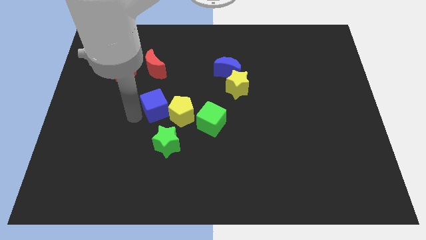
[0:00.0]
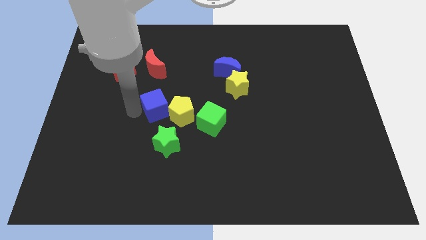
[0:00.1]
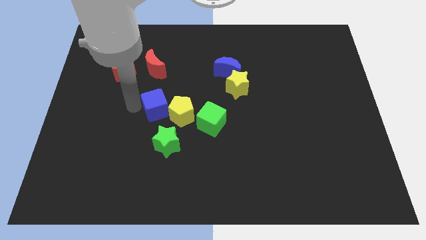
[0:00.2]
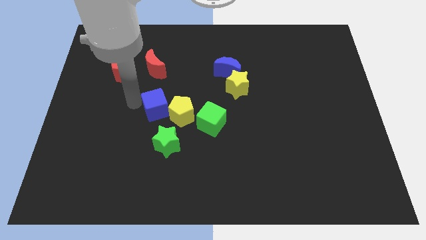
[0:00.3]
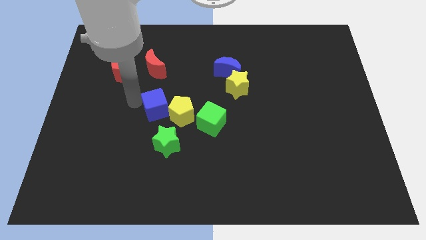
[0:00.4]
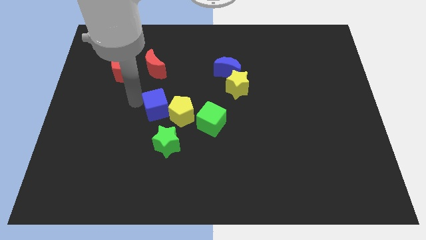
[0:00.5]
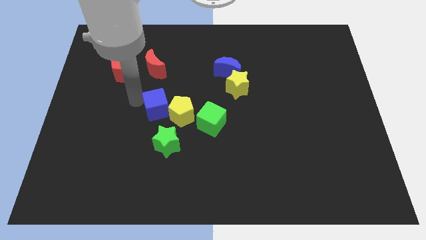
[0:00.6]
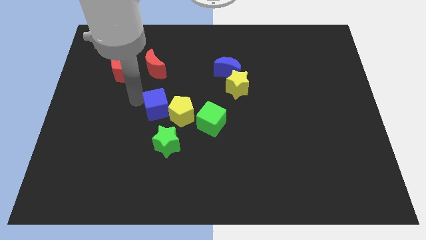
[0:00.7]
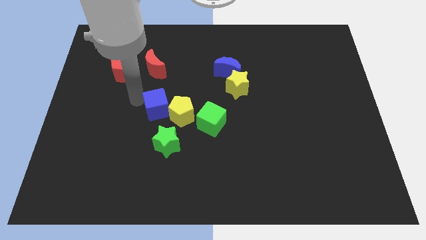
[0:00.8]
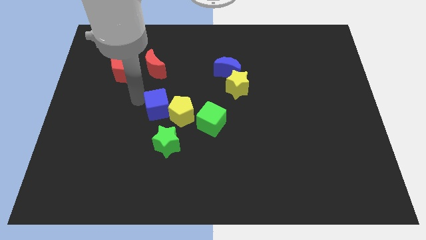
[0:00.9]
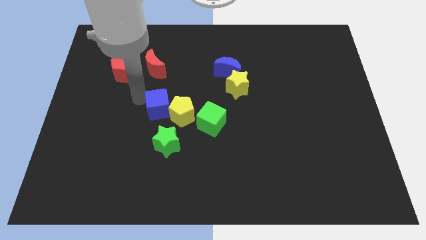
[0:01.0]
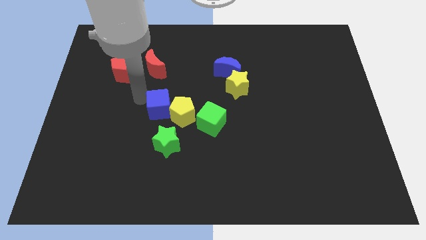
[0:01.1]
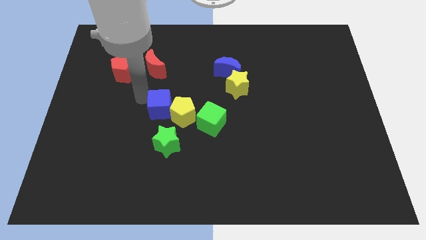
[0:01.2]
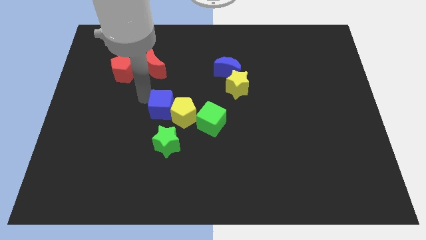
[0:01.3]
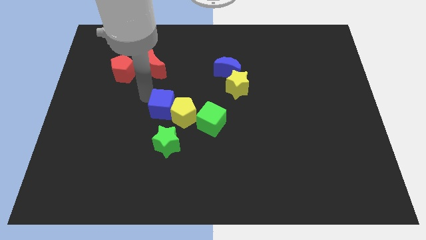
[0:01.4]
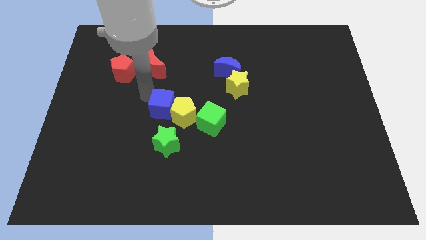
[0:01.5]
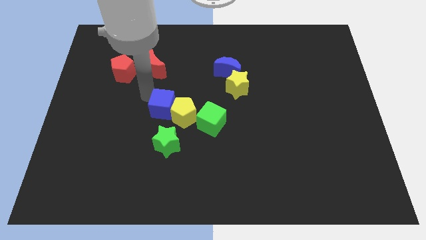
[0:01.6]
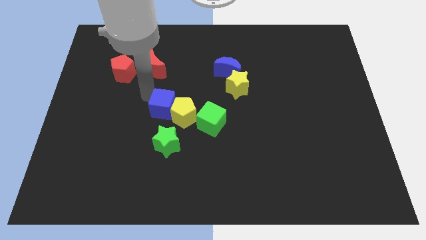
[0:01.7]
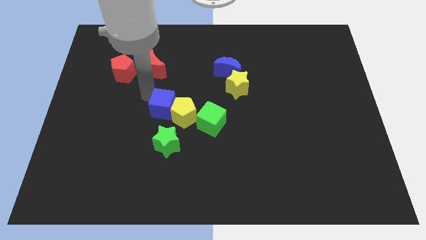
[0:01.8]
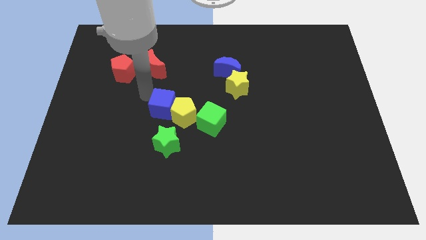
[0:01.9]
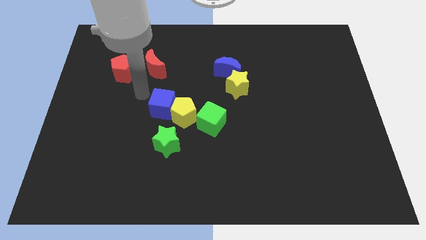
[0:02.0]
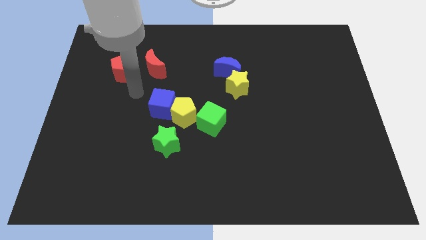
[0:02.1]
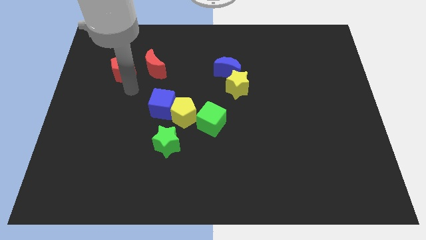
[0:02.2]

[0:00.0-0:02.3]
put the blue cube to the top left side of the yellow pentagon

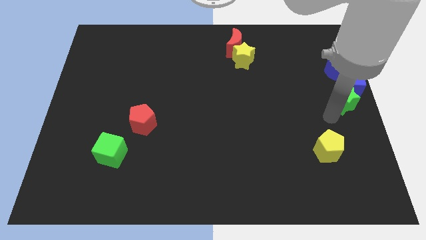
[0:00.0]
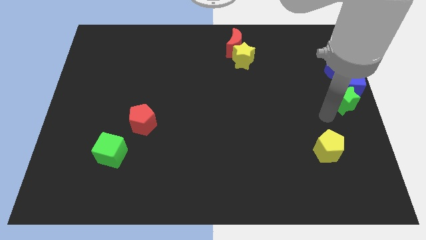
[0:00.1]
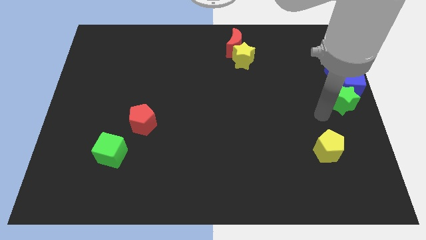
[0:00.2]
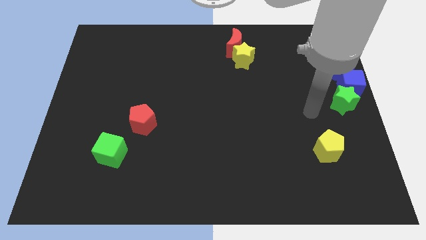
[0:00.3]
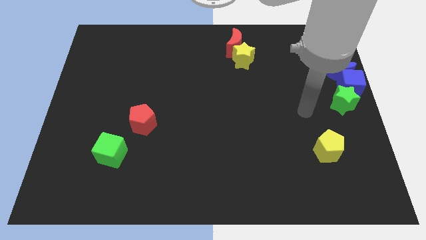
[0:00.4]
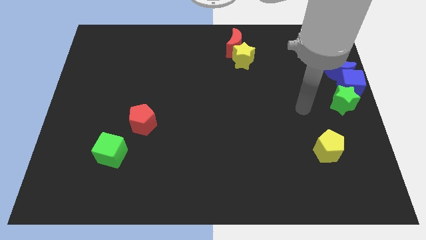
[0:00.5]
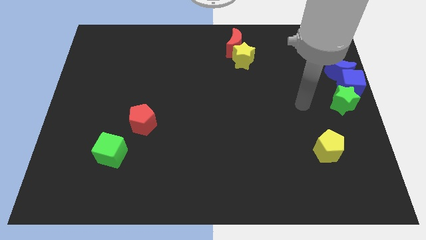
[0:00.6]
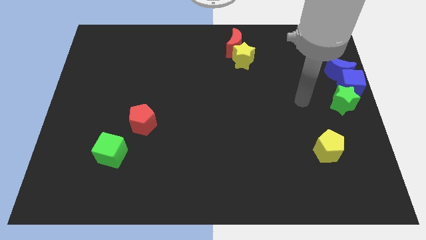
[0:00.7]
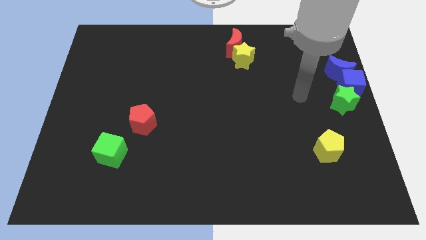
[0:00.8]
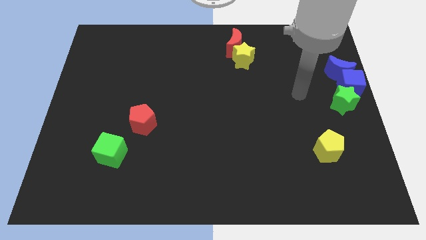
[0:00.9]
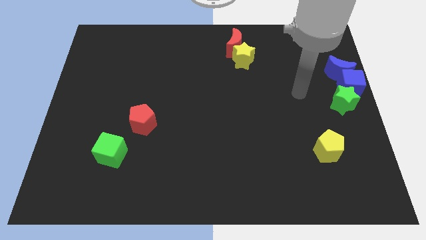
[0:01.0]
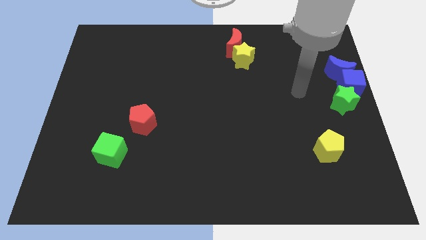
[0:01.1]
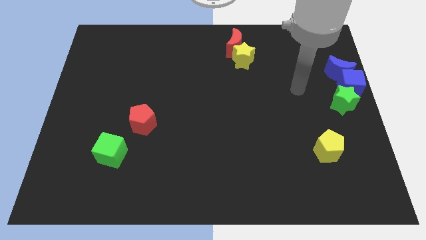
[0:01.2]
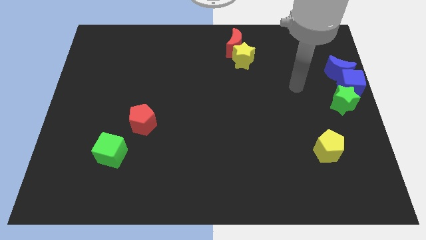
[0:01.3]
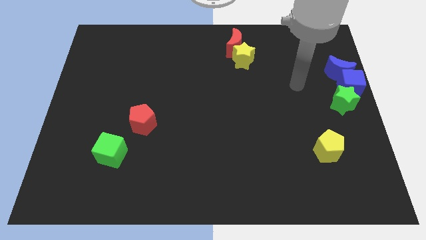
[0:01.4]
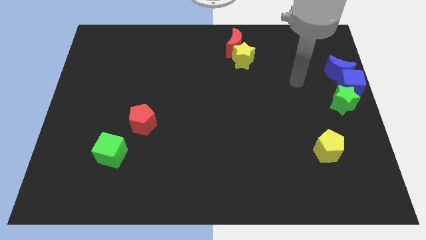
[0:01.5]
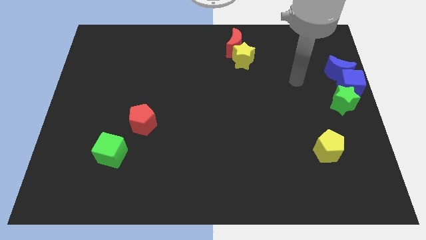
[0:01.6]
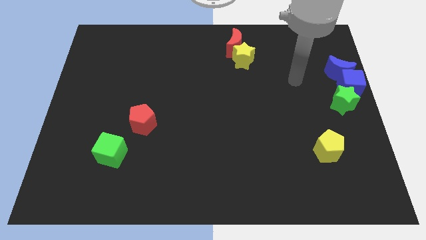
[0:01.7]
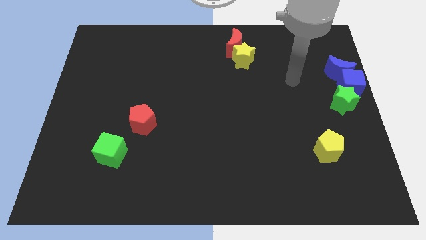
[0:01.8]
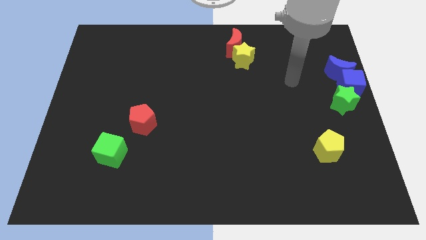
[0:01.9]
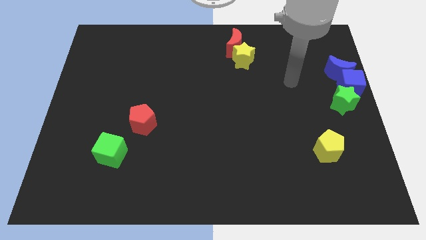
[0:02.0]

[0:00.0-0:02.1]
move your arm away from green star

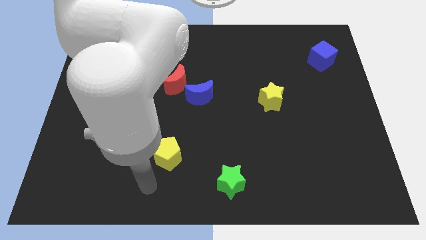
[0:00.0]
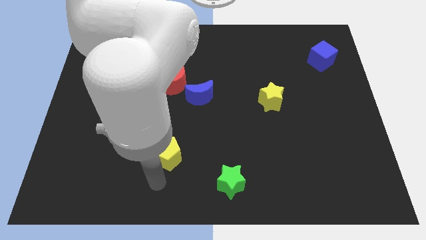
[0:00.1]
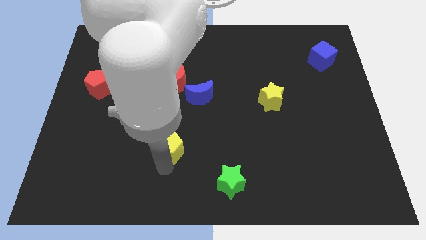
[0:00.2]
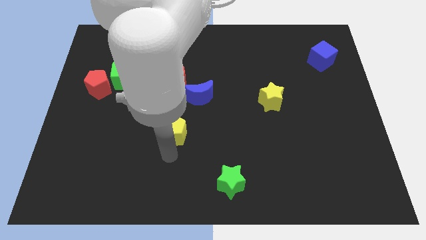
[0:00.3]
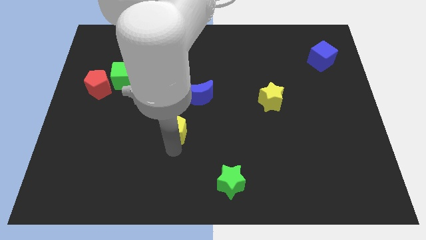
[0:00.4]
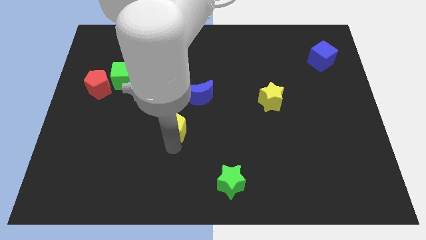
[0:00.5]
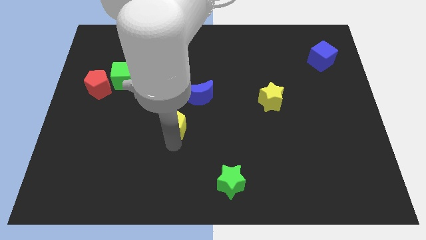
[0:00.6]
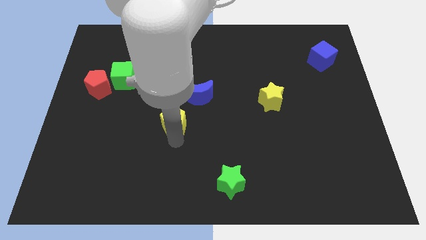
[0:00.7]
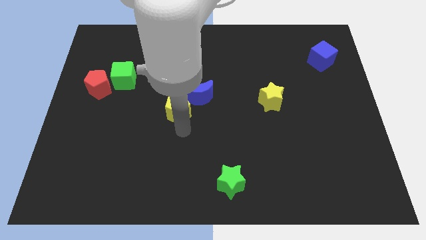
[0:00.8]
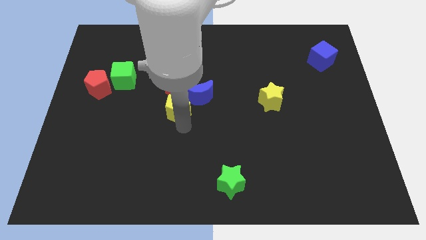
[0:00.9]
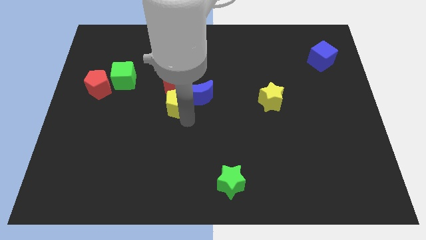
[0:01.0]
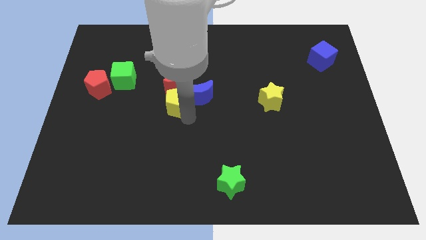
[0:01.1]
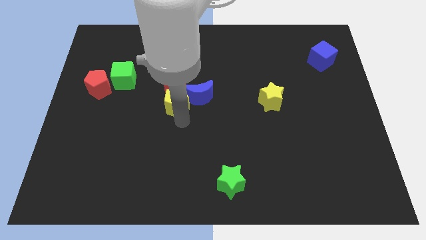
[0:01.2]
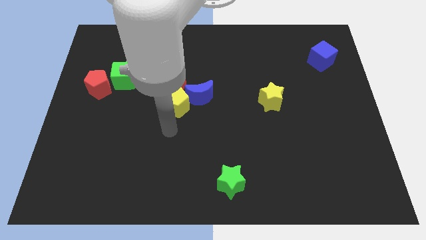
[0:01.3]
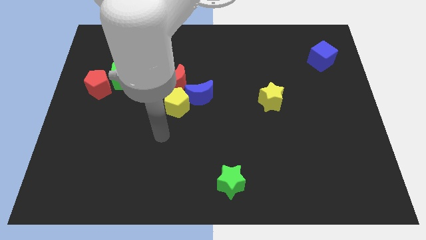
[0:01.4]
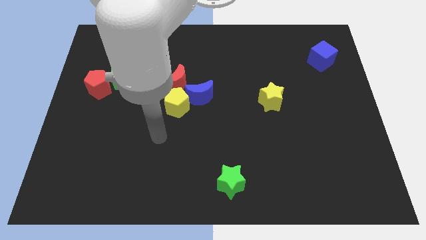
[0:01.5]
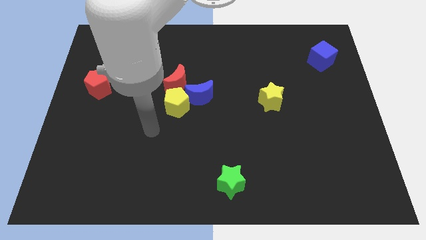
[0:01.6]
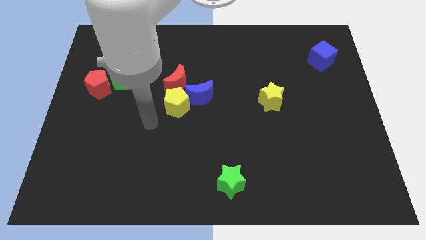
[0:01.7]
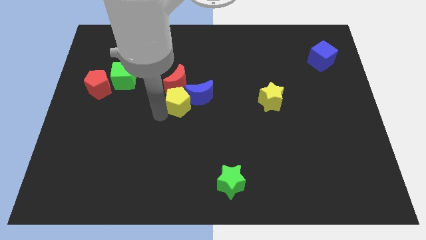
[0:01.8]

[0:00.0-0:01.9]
push the yellow pentagon into the blue moon

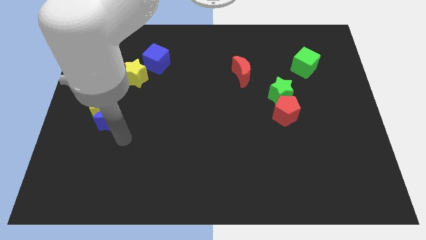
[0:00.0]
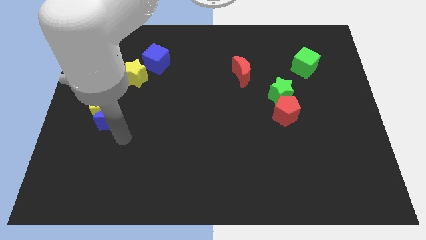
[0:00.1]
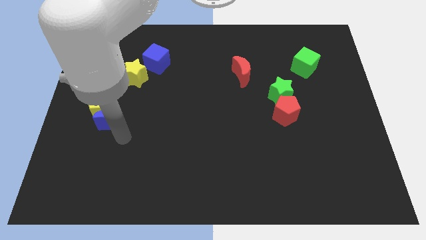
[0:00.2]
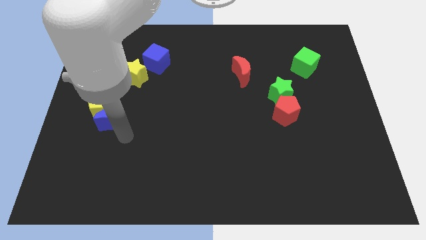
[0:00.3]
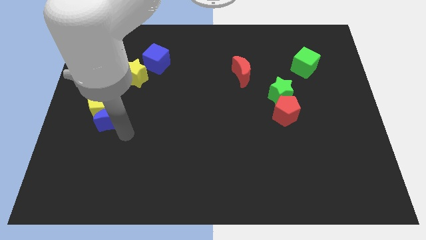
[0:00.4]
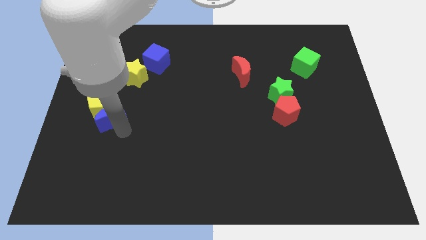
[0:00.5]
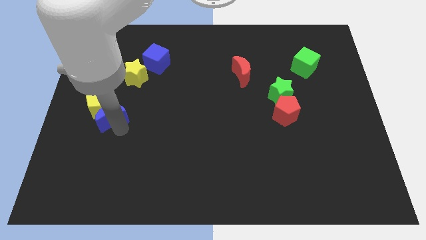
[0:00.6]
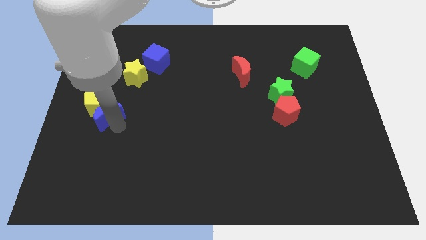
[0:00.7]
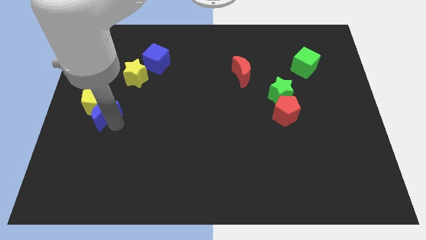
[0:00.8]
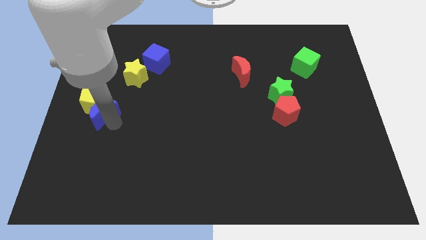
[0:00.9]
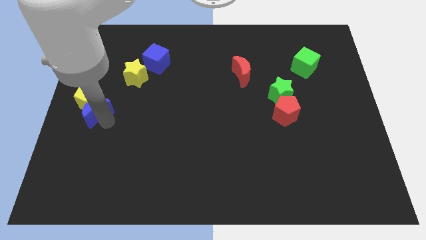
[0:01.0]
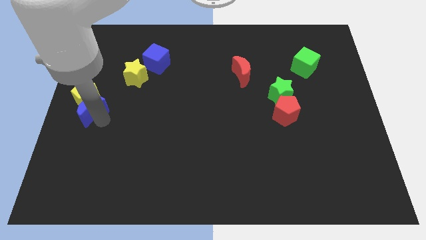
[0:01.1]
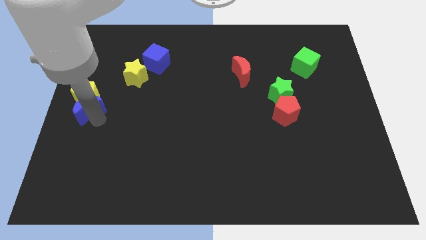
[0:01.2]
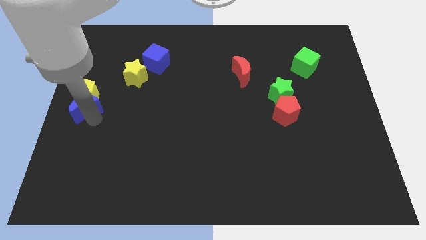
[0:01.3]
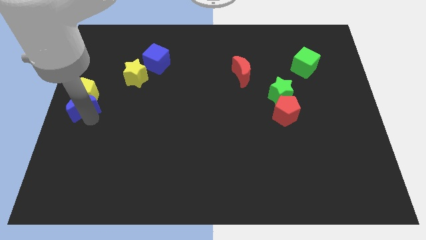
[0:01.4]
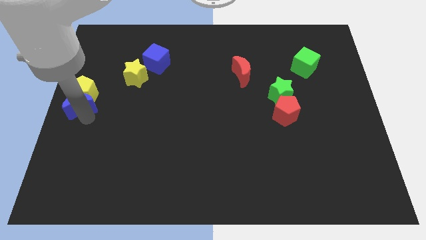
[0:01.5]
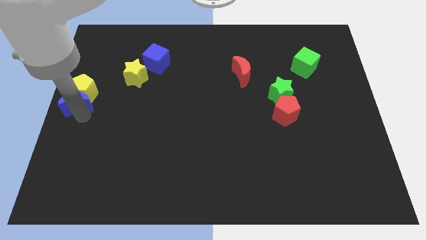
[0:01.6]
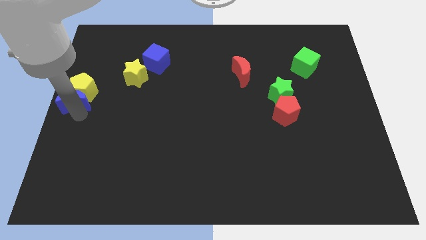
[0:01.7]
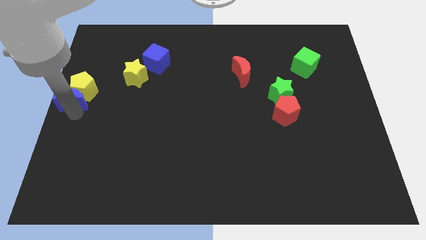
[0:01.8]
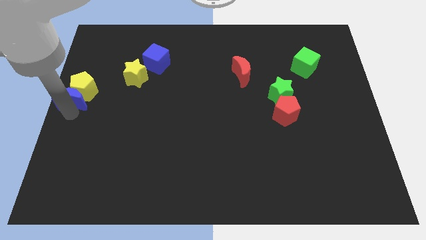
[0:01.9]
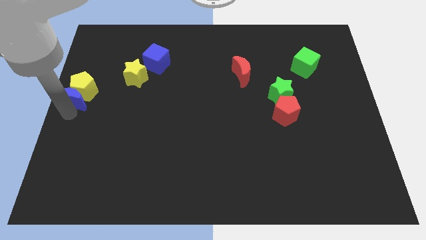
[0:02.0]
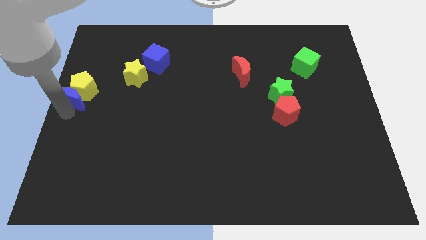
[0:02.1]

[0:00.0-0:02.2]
push the blue crescent into the yellow pentagon

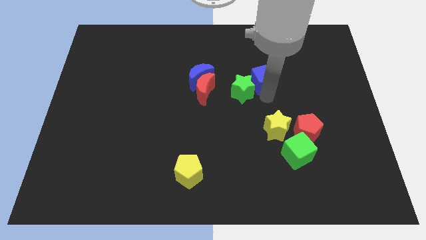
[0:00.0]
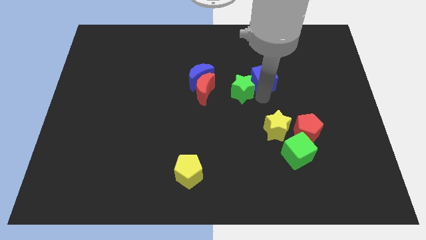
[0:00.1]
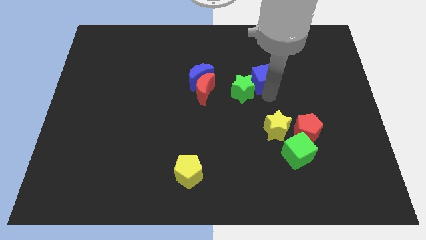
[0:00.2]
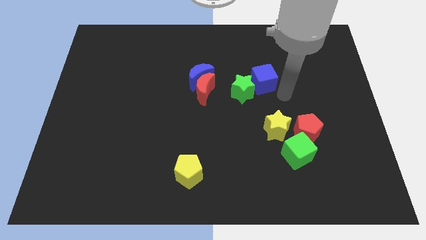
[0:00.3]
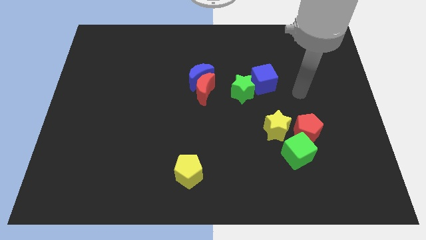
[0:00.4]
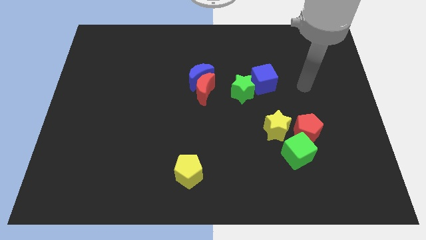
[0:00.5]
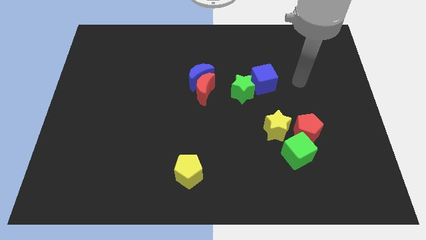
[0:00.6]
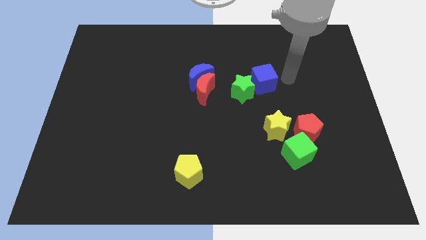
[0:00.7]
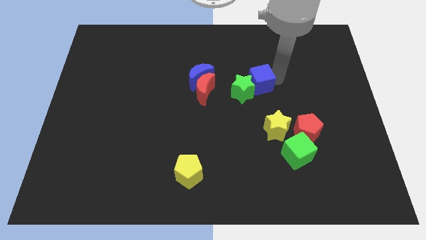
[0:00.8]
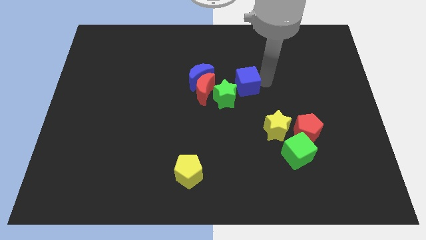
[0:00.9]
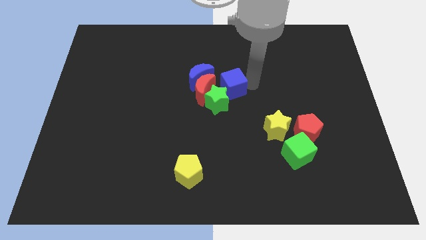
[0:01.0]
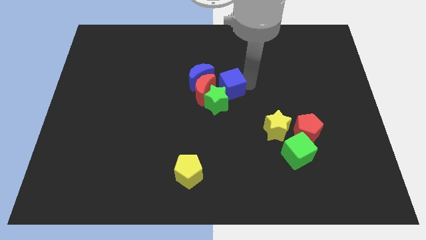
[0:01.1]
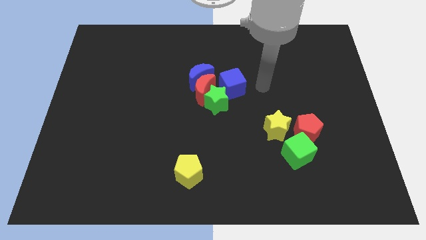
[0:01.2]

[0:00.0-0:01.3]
move blue cube into group of blocks
